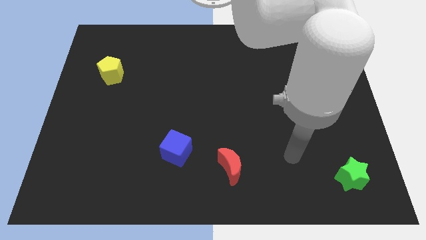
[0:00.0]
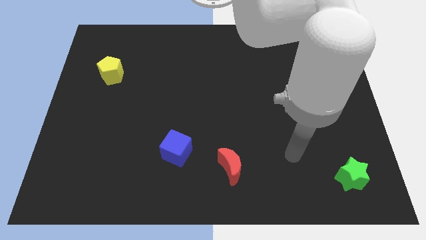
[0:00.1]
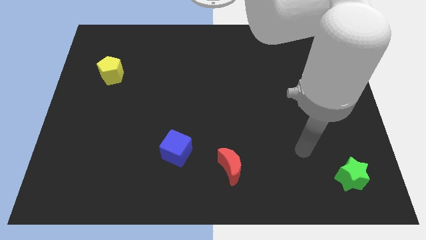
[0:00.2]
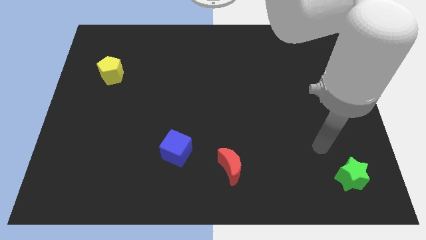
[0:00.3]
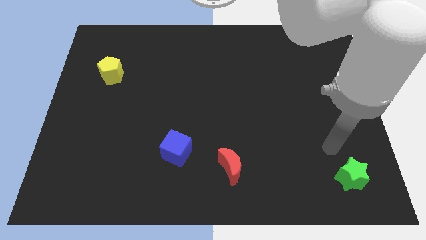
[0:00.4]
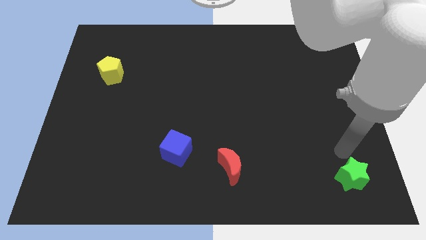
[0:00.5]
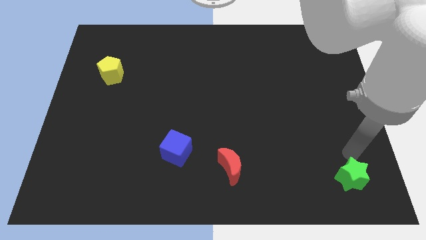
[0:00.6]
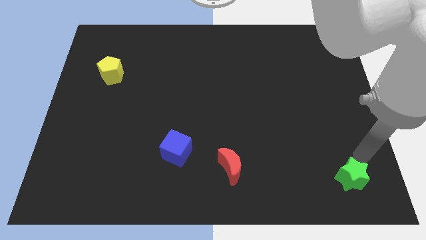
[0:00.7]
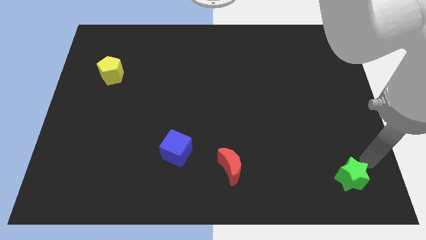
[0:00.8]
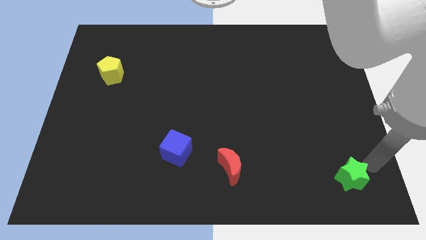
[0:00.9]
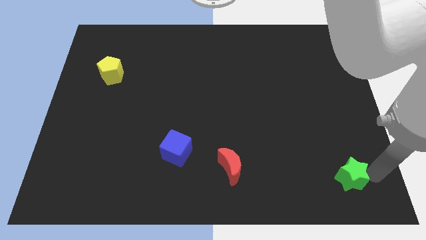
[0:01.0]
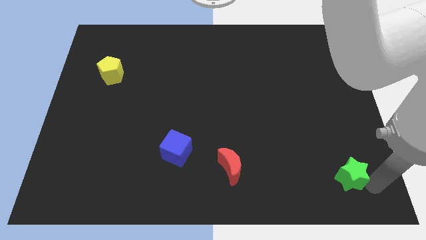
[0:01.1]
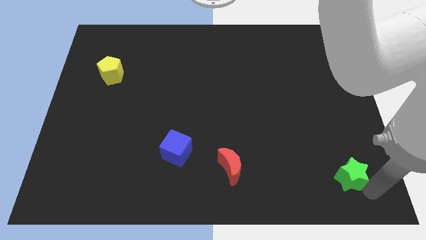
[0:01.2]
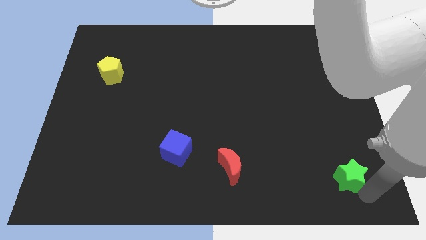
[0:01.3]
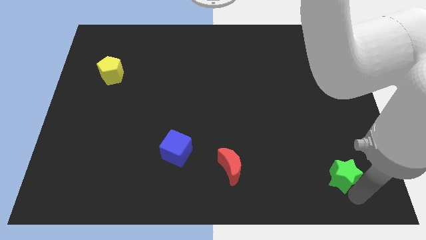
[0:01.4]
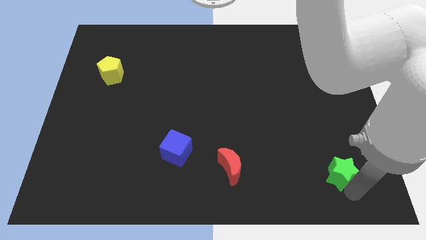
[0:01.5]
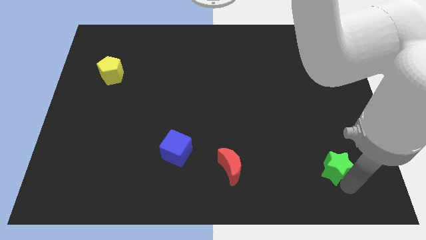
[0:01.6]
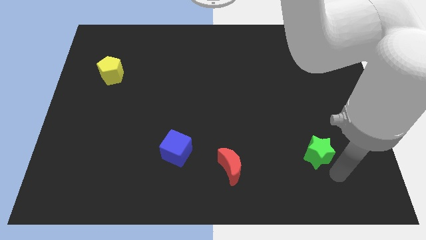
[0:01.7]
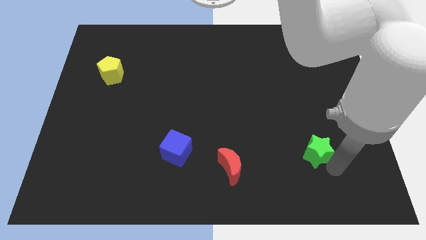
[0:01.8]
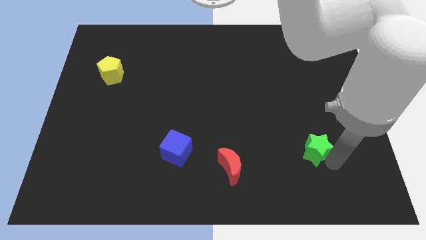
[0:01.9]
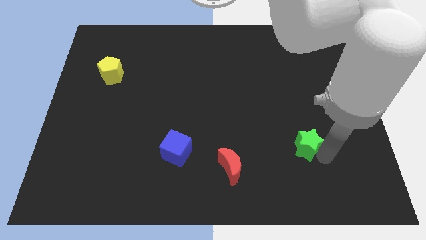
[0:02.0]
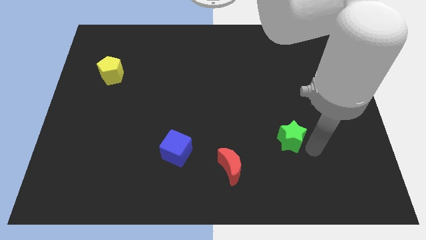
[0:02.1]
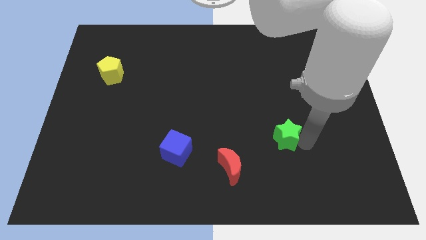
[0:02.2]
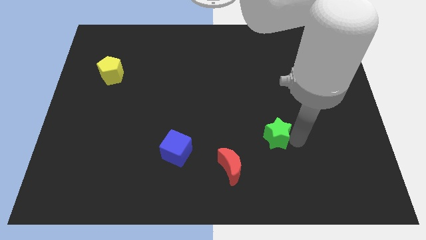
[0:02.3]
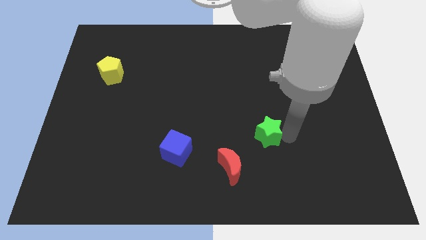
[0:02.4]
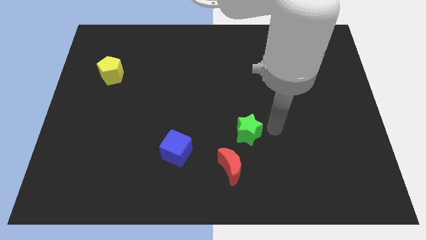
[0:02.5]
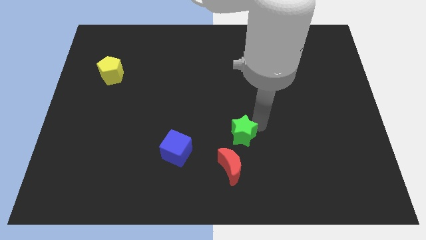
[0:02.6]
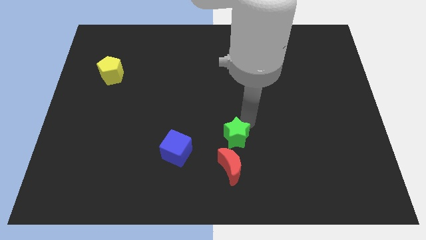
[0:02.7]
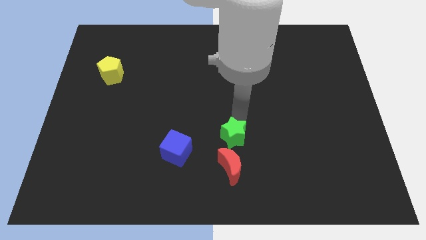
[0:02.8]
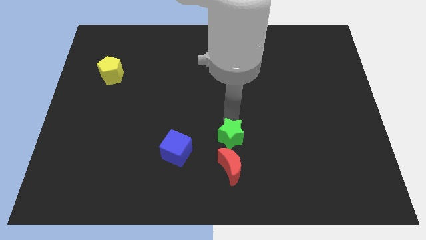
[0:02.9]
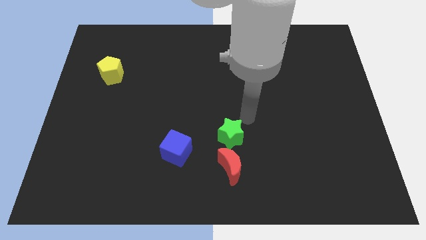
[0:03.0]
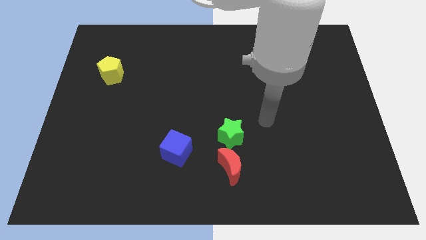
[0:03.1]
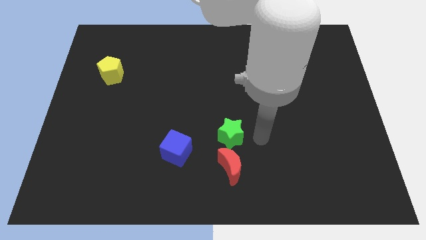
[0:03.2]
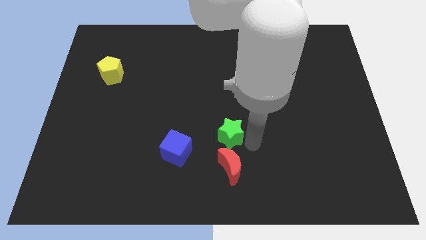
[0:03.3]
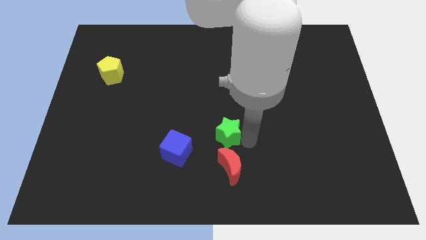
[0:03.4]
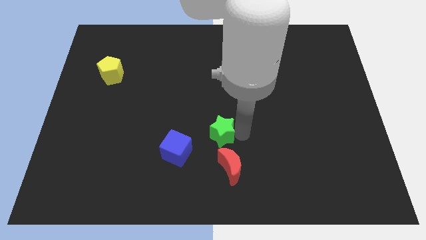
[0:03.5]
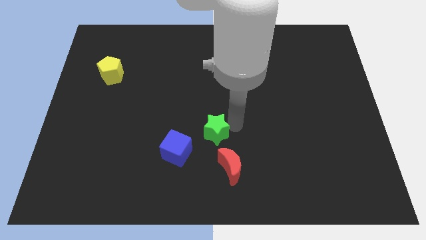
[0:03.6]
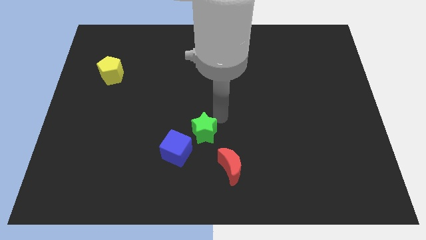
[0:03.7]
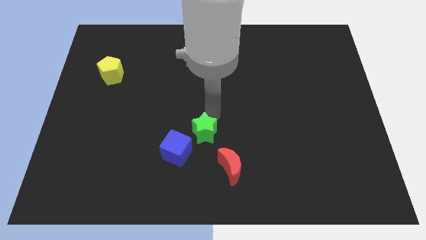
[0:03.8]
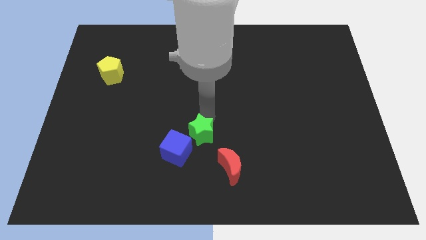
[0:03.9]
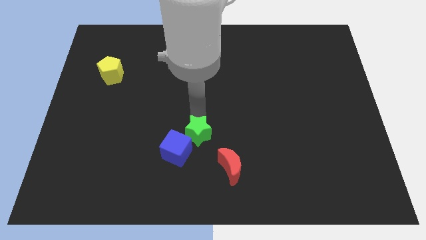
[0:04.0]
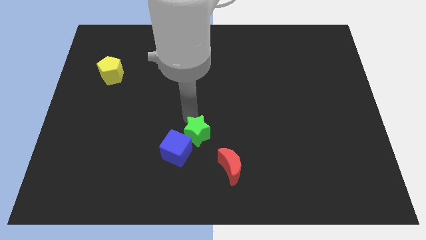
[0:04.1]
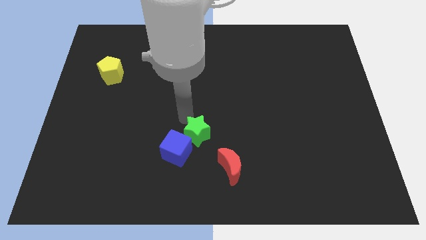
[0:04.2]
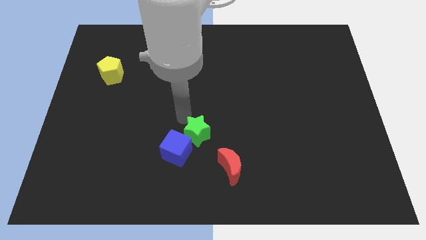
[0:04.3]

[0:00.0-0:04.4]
move the green block to the blue block

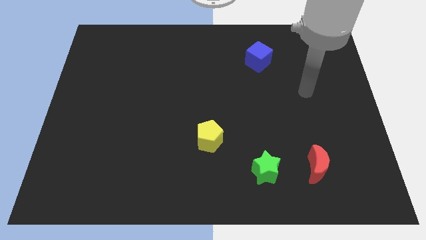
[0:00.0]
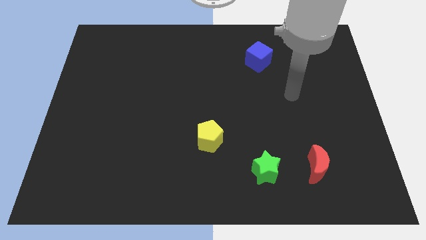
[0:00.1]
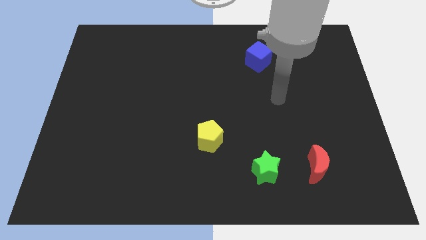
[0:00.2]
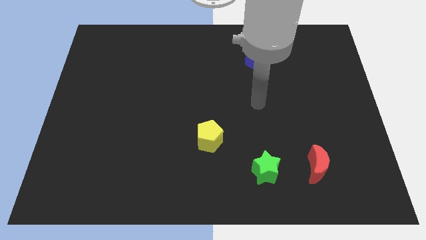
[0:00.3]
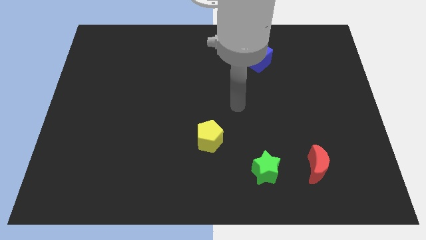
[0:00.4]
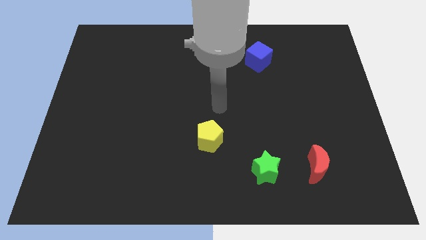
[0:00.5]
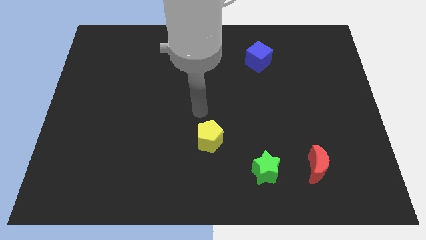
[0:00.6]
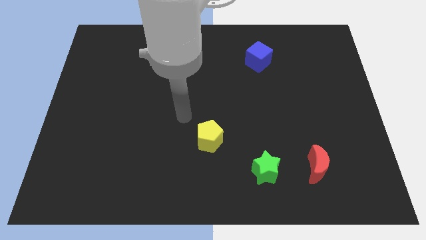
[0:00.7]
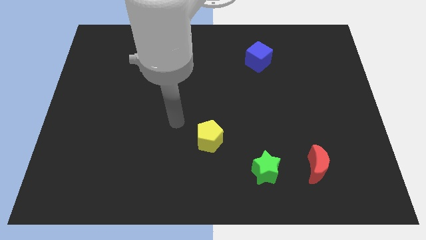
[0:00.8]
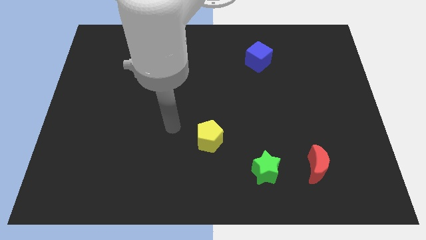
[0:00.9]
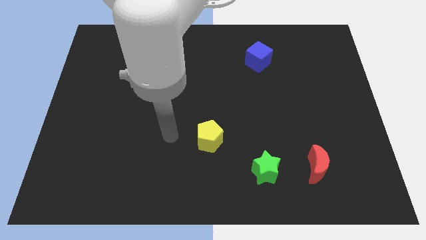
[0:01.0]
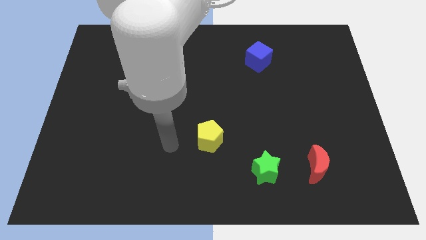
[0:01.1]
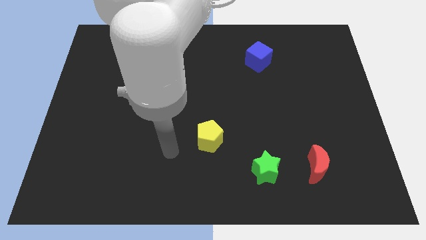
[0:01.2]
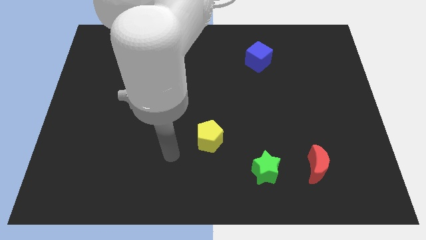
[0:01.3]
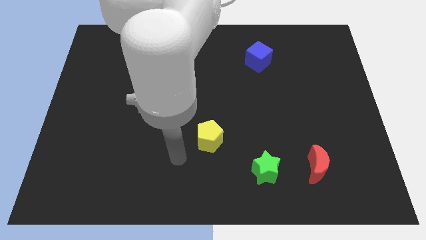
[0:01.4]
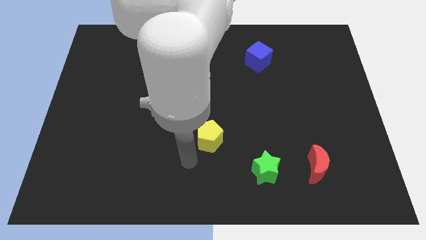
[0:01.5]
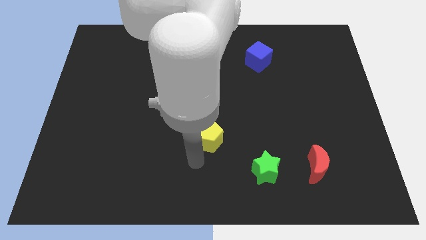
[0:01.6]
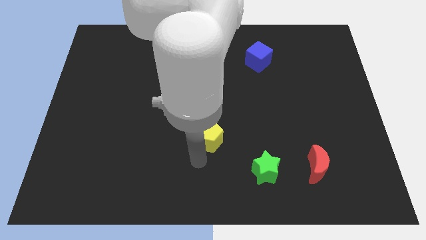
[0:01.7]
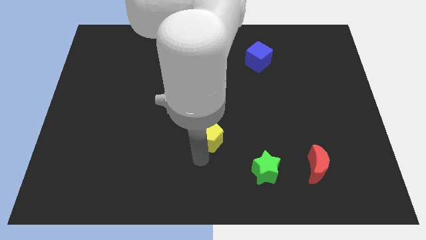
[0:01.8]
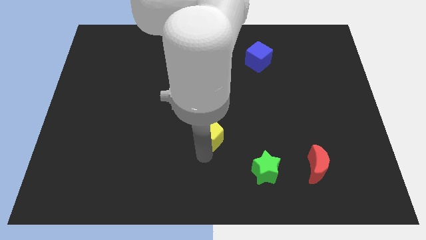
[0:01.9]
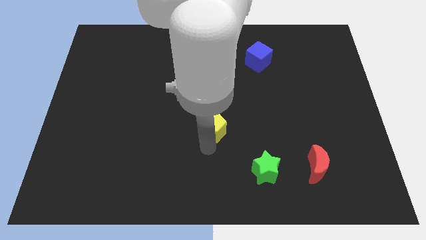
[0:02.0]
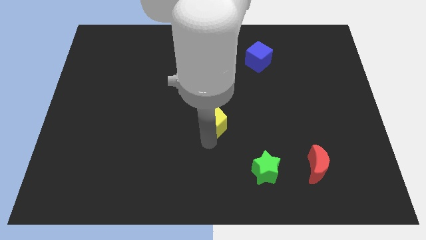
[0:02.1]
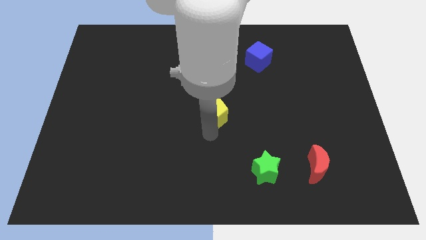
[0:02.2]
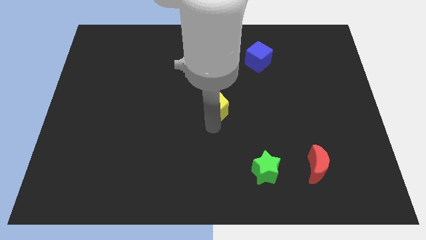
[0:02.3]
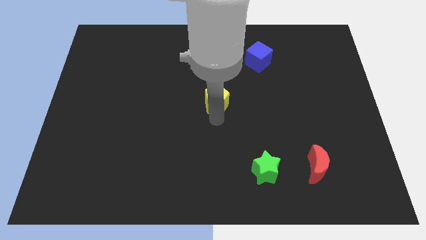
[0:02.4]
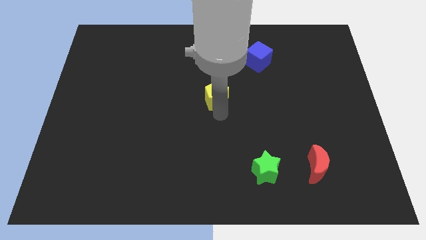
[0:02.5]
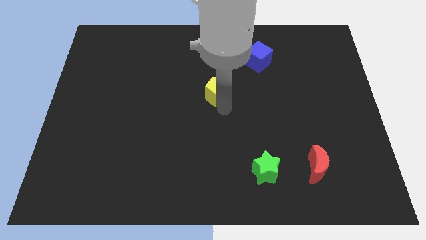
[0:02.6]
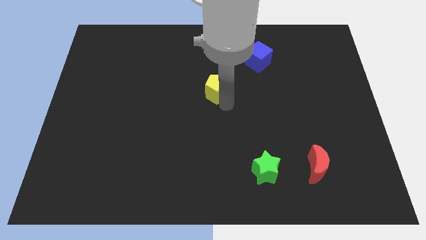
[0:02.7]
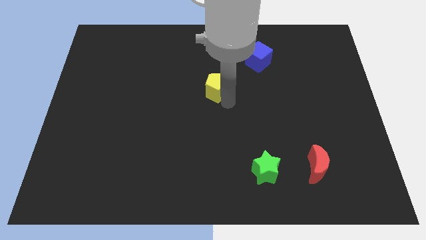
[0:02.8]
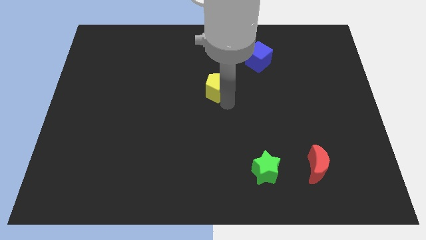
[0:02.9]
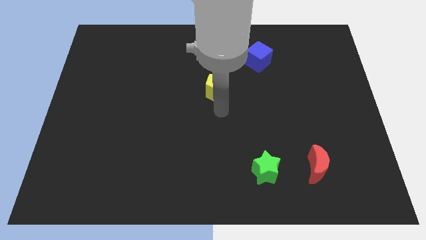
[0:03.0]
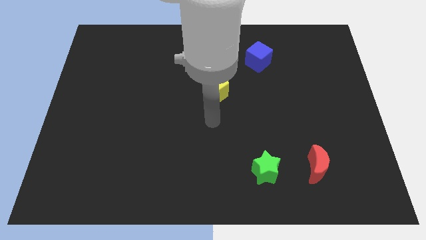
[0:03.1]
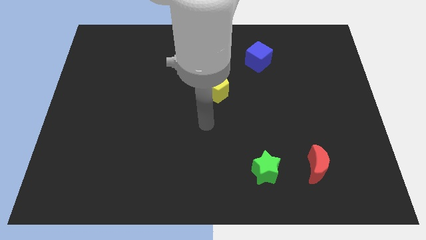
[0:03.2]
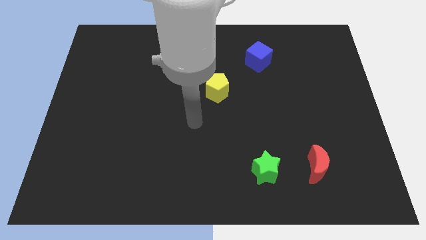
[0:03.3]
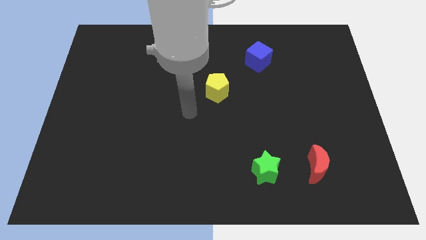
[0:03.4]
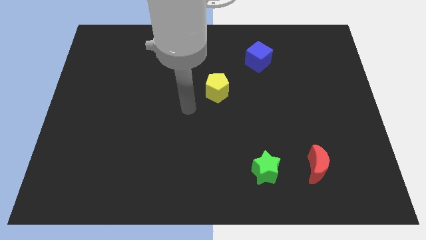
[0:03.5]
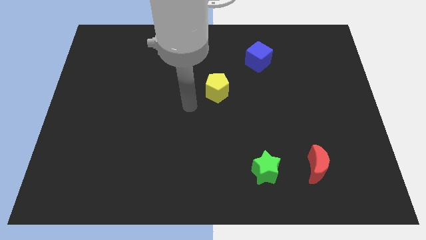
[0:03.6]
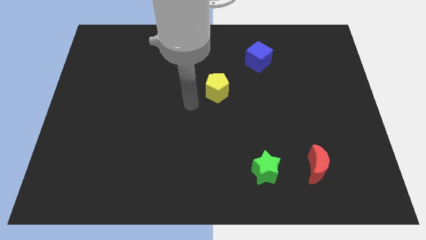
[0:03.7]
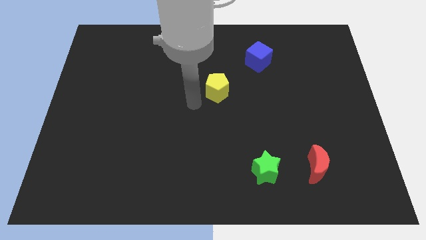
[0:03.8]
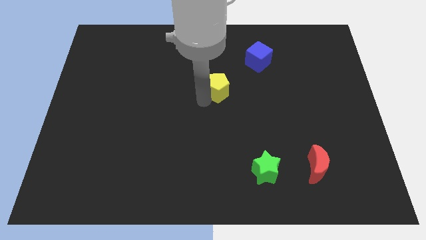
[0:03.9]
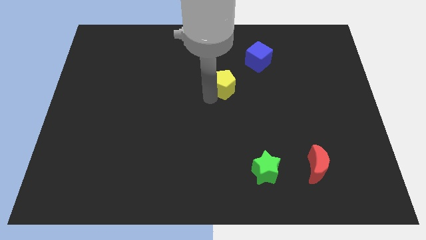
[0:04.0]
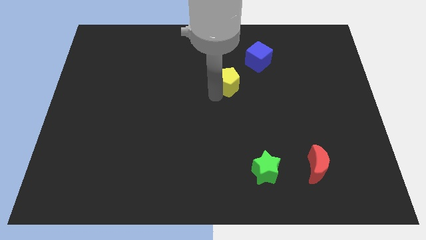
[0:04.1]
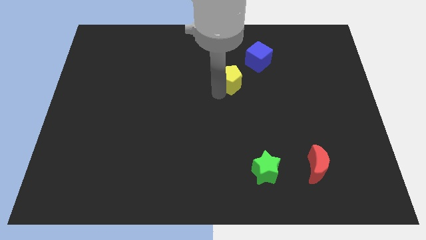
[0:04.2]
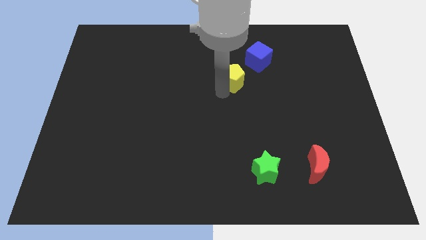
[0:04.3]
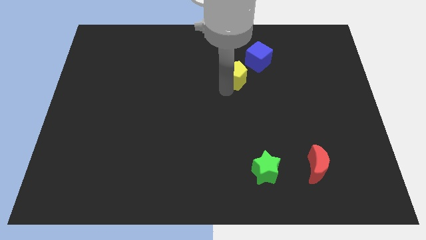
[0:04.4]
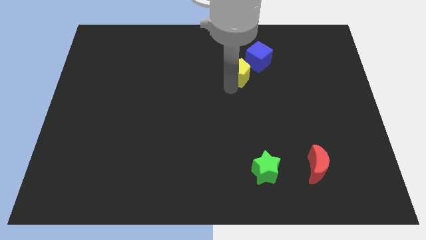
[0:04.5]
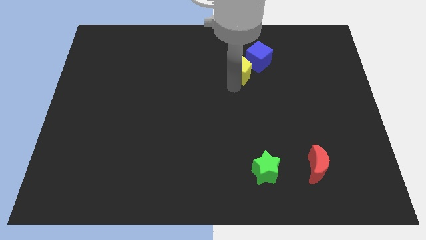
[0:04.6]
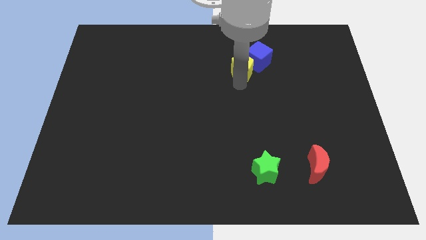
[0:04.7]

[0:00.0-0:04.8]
move the yellow pentagon to the blue block
